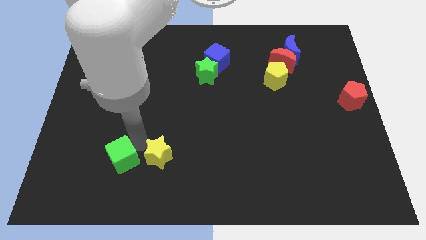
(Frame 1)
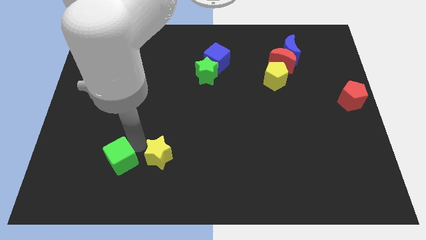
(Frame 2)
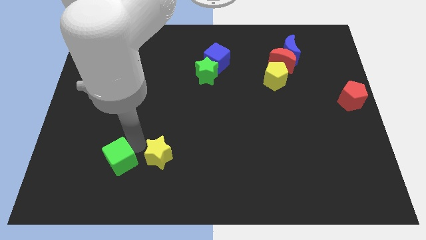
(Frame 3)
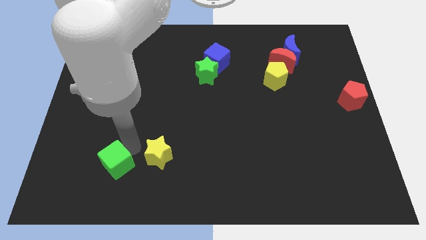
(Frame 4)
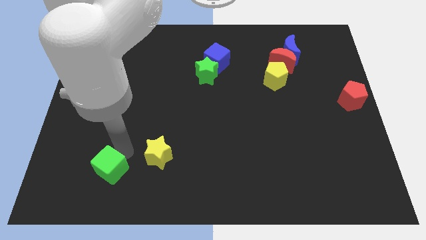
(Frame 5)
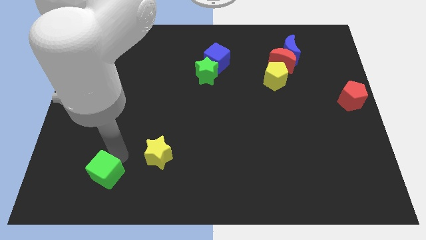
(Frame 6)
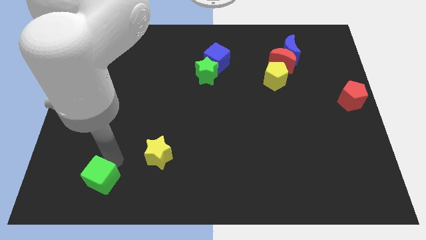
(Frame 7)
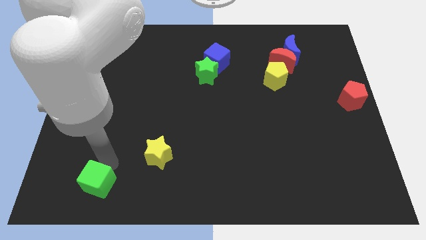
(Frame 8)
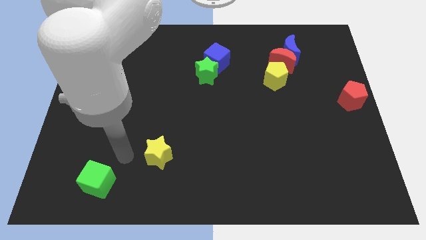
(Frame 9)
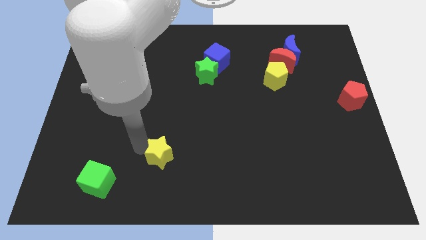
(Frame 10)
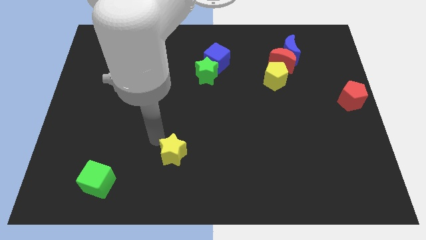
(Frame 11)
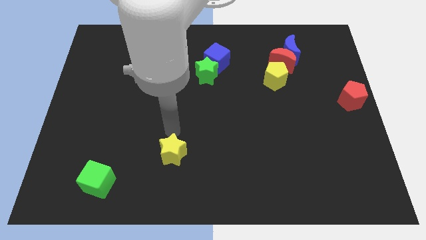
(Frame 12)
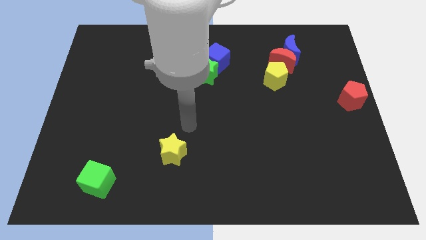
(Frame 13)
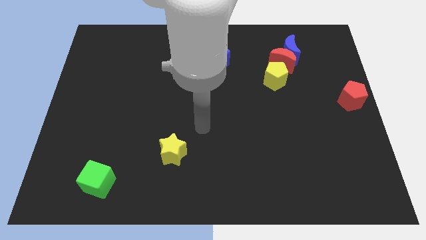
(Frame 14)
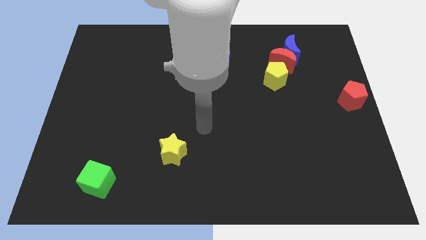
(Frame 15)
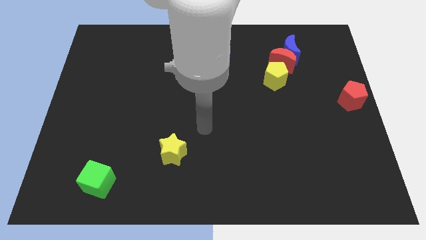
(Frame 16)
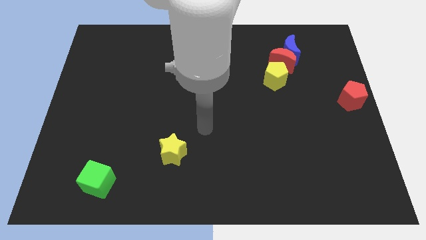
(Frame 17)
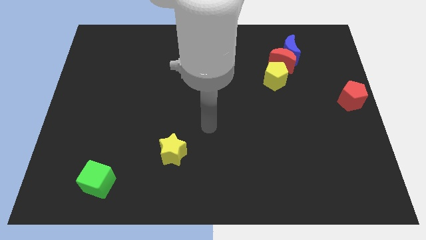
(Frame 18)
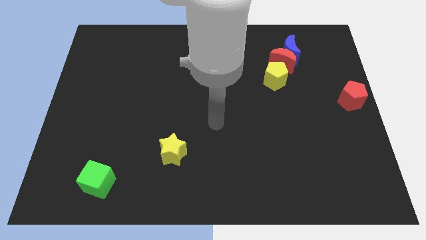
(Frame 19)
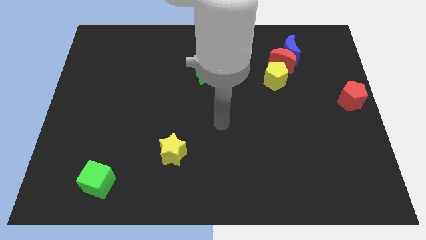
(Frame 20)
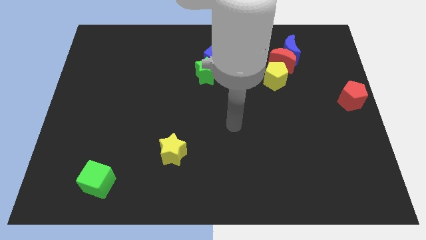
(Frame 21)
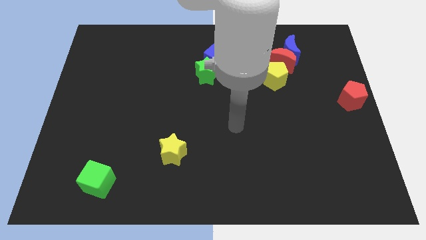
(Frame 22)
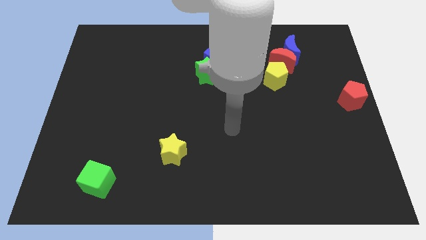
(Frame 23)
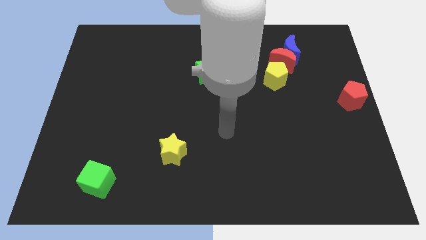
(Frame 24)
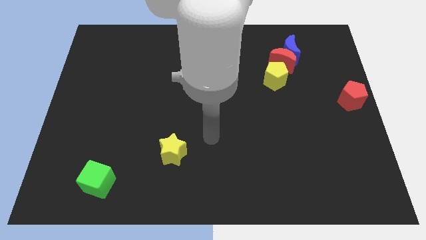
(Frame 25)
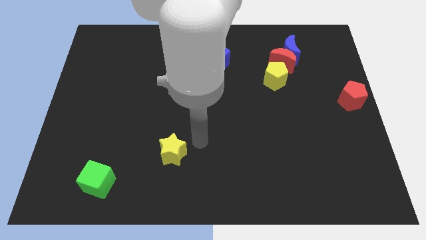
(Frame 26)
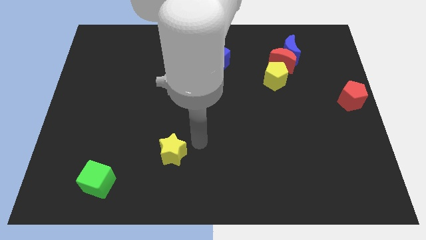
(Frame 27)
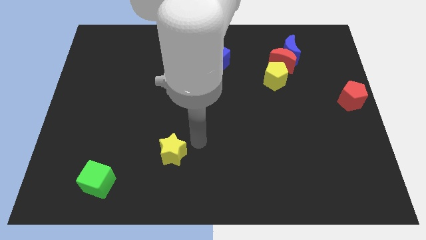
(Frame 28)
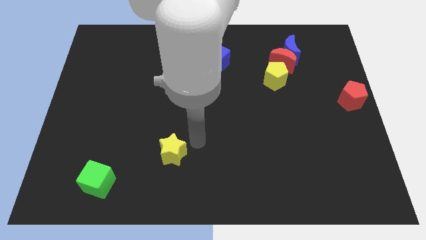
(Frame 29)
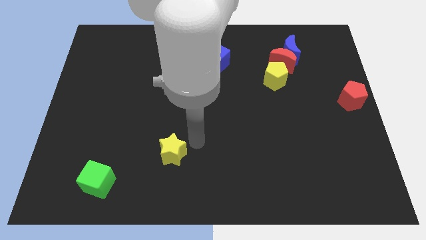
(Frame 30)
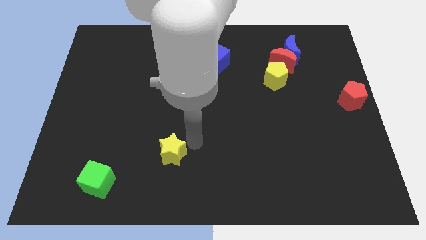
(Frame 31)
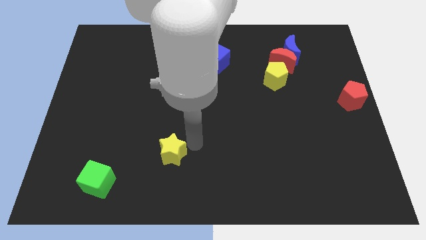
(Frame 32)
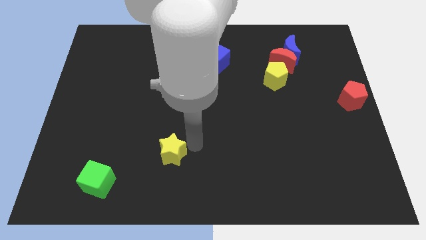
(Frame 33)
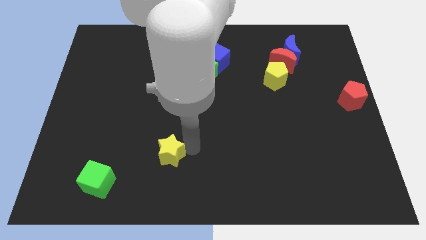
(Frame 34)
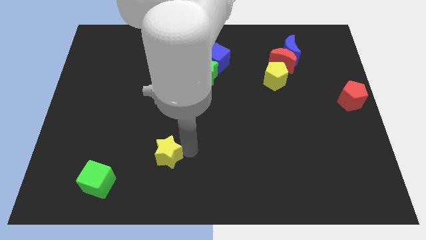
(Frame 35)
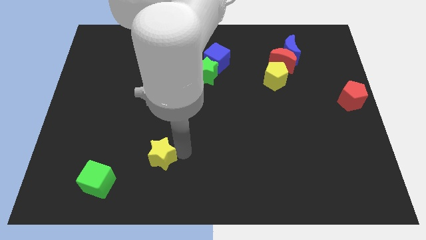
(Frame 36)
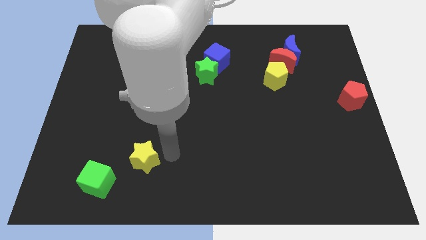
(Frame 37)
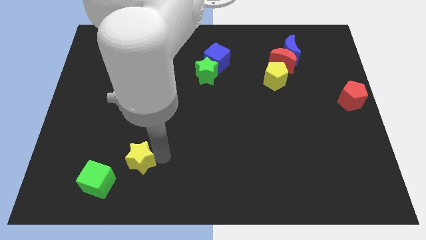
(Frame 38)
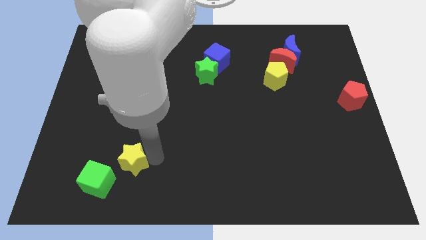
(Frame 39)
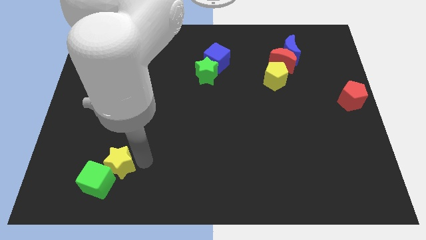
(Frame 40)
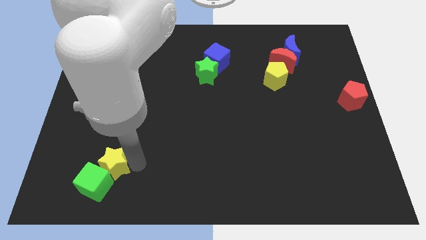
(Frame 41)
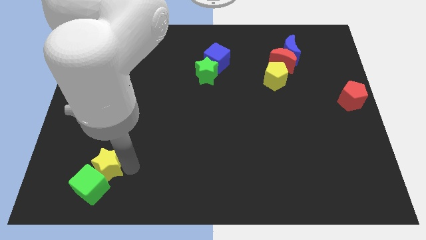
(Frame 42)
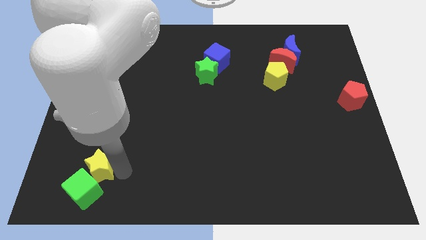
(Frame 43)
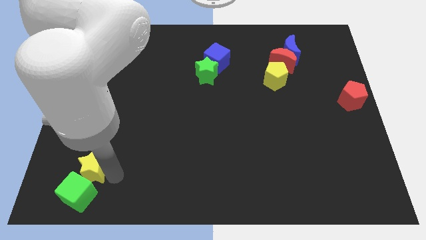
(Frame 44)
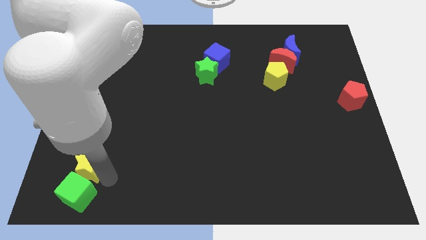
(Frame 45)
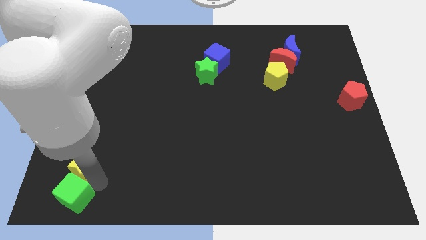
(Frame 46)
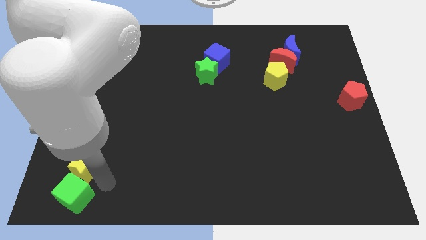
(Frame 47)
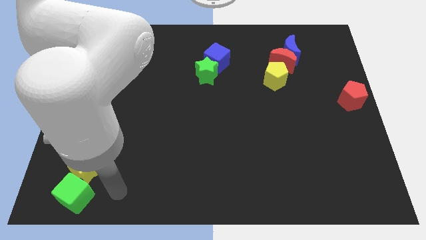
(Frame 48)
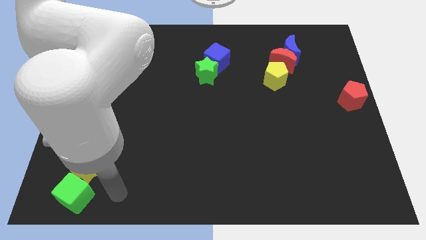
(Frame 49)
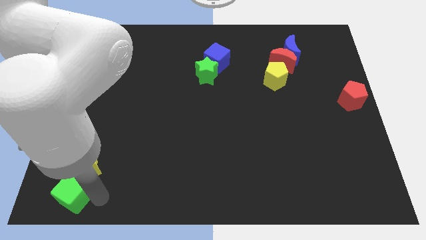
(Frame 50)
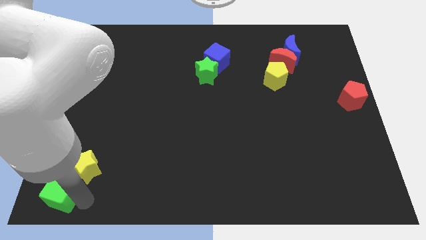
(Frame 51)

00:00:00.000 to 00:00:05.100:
push the yellow star into the green cube

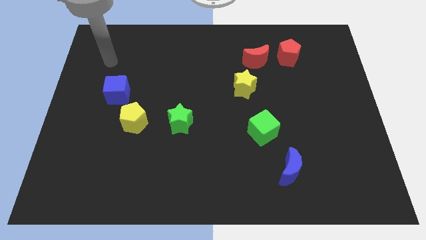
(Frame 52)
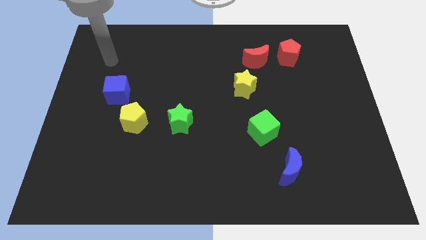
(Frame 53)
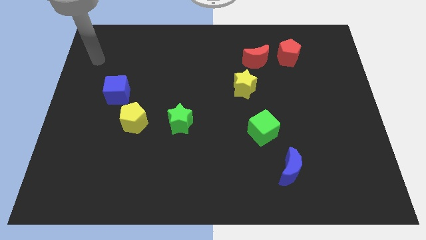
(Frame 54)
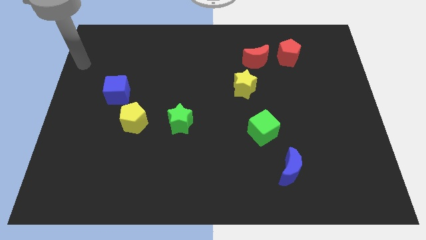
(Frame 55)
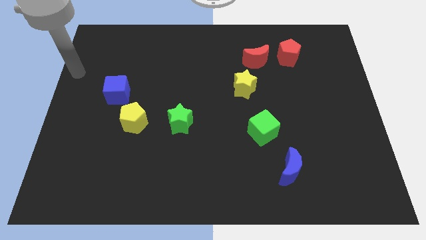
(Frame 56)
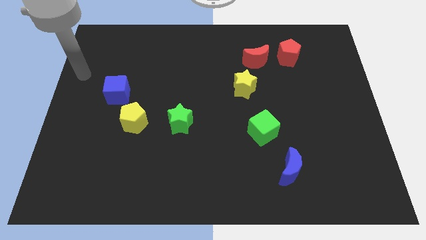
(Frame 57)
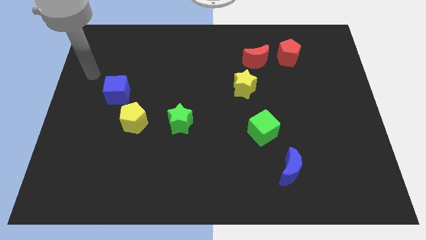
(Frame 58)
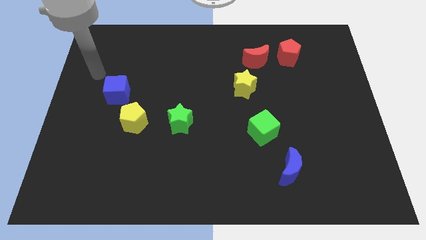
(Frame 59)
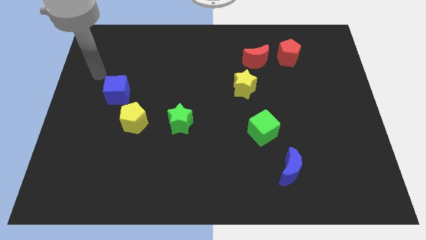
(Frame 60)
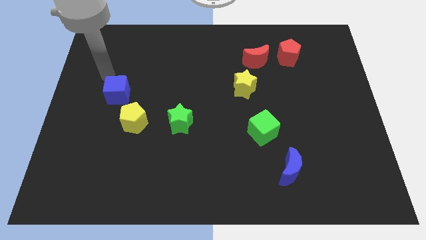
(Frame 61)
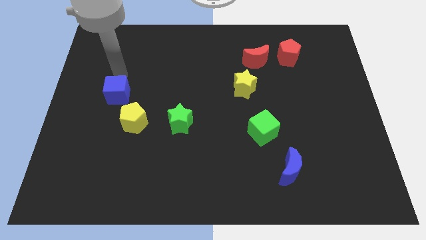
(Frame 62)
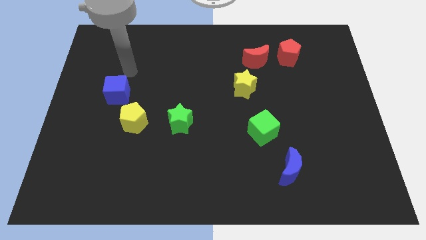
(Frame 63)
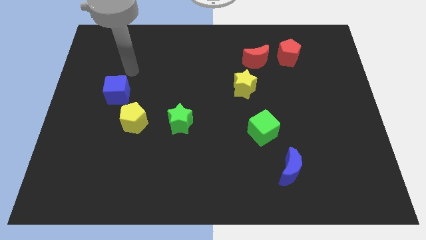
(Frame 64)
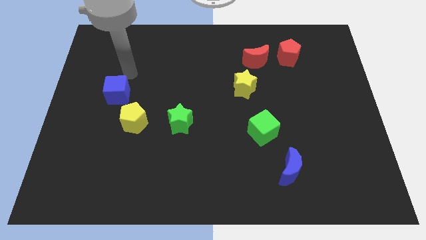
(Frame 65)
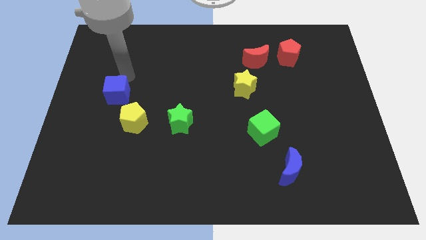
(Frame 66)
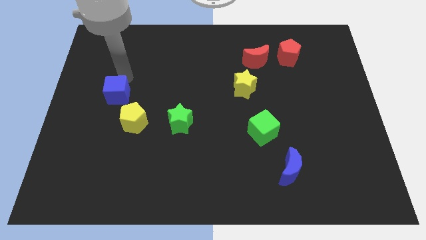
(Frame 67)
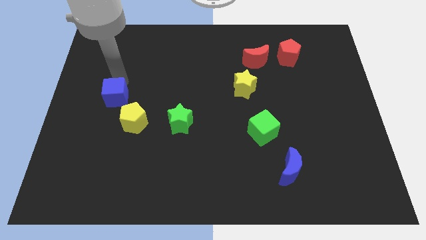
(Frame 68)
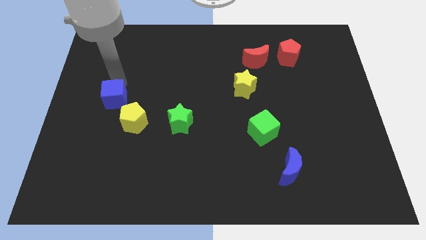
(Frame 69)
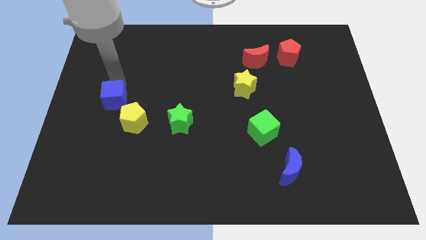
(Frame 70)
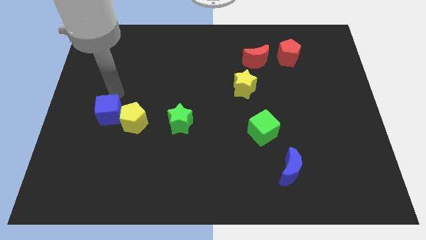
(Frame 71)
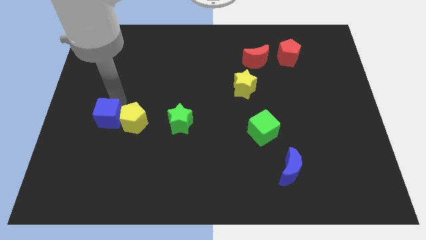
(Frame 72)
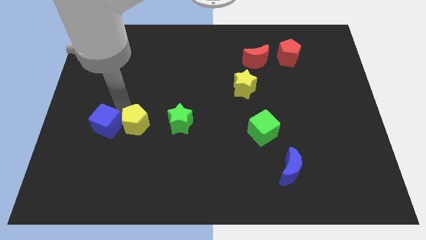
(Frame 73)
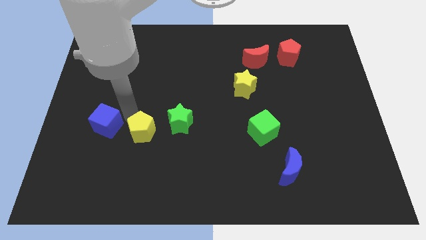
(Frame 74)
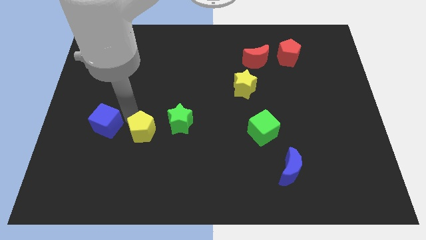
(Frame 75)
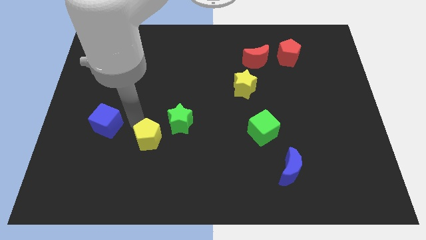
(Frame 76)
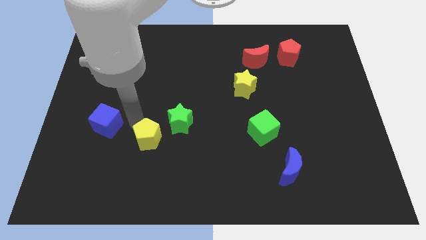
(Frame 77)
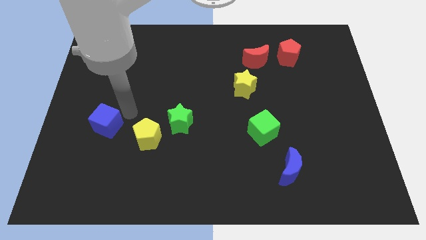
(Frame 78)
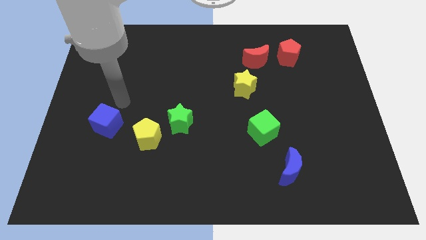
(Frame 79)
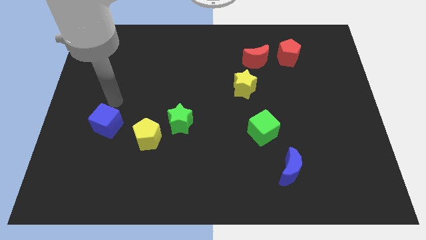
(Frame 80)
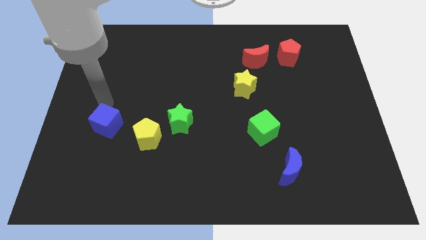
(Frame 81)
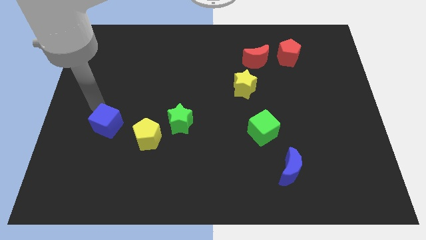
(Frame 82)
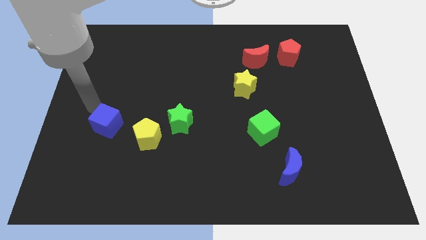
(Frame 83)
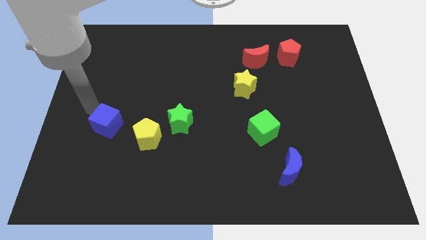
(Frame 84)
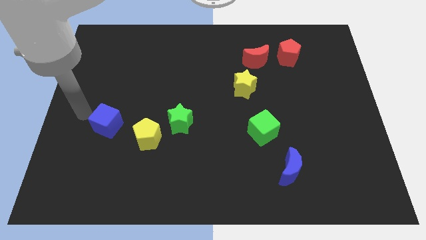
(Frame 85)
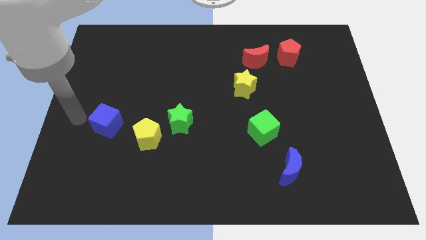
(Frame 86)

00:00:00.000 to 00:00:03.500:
push the yellow pentagon downward

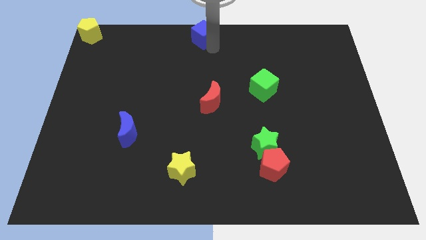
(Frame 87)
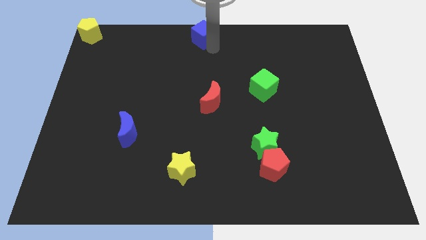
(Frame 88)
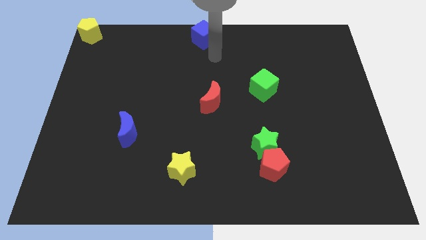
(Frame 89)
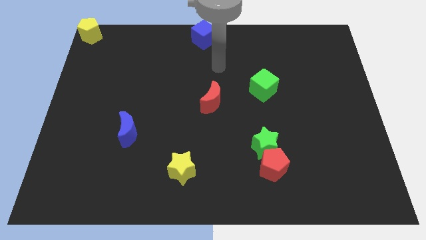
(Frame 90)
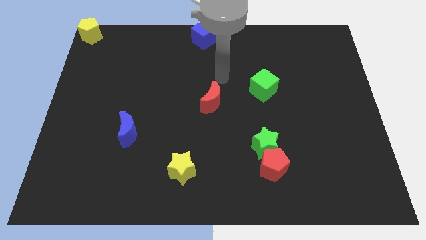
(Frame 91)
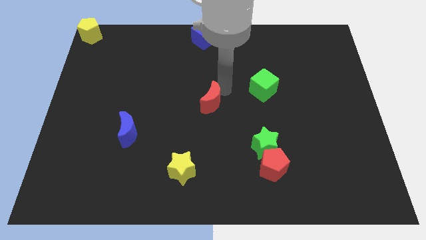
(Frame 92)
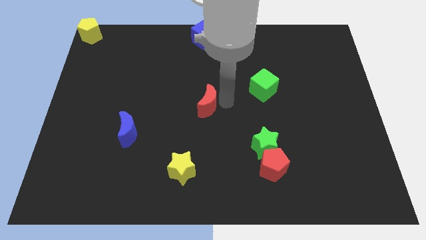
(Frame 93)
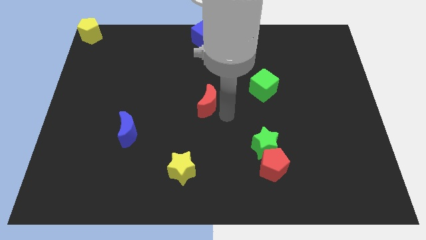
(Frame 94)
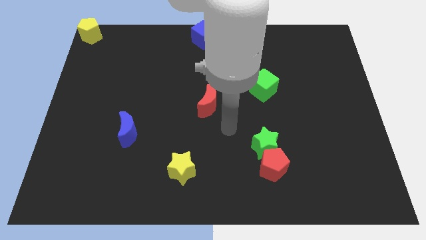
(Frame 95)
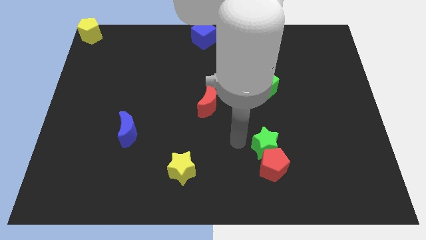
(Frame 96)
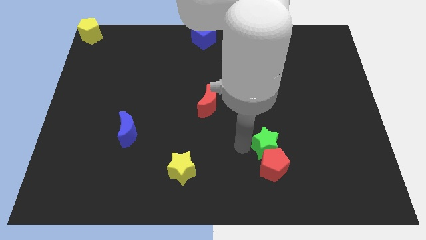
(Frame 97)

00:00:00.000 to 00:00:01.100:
slightly touch right to the red moon
